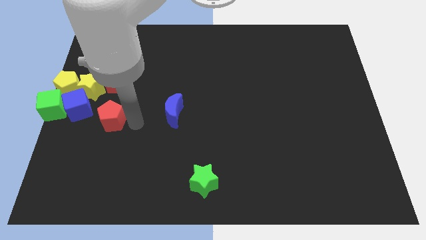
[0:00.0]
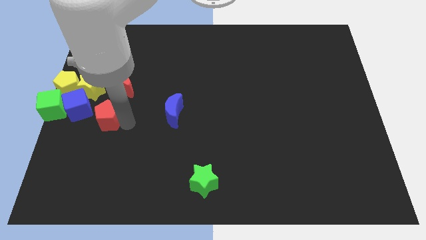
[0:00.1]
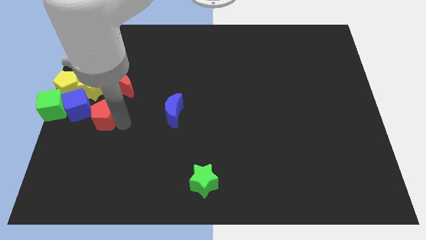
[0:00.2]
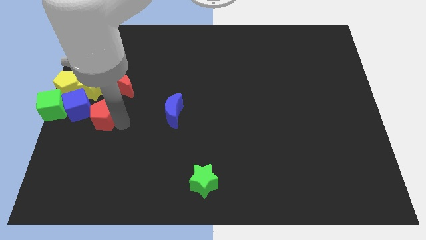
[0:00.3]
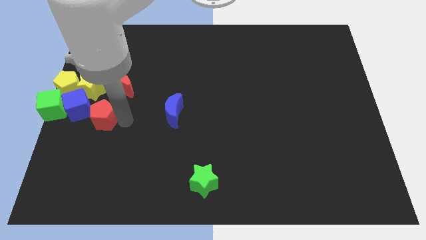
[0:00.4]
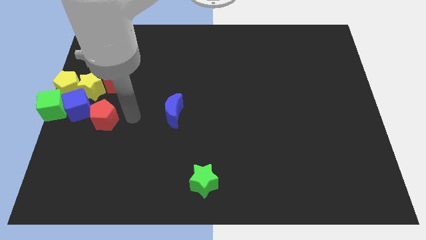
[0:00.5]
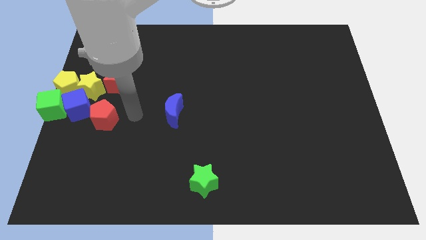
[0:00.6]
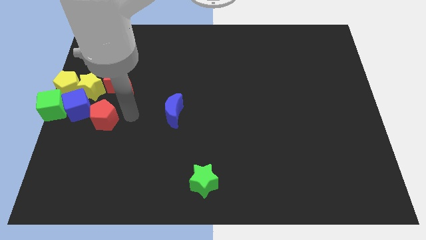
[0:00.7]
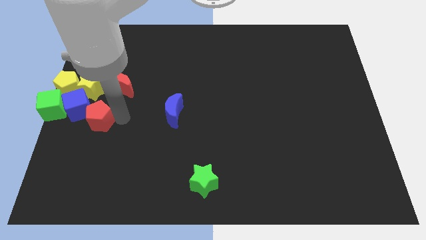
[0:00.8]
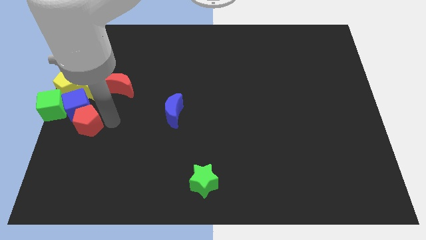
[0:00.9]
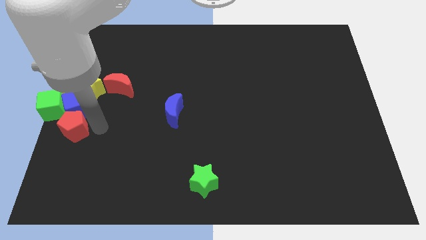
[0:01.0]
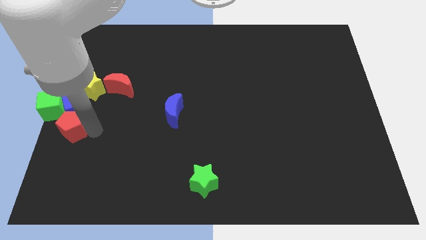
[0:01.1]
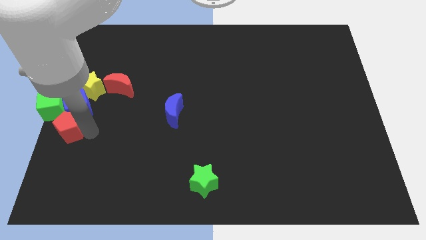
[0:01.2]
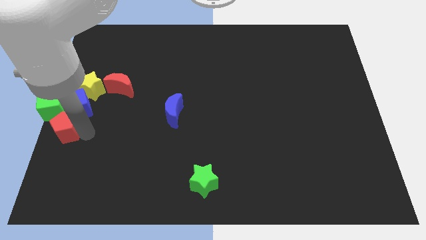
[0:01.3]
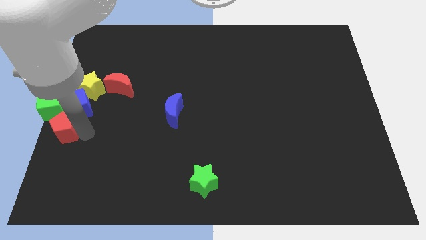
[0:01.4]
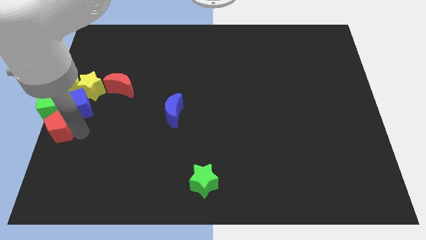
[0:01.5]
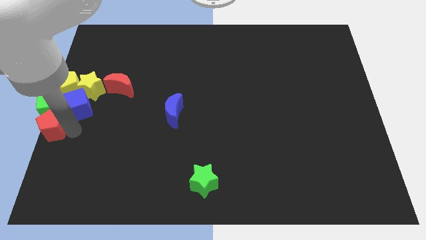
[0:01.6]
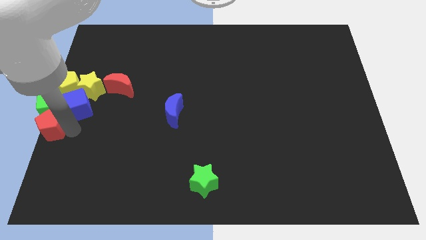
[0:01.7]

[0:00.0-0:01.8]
push the red pentagon below the green cube

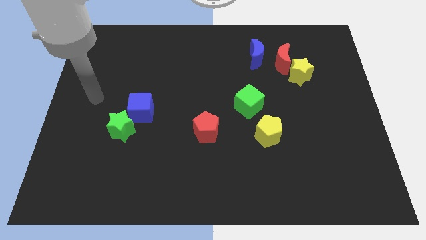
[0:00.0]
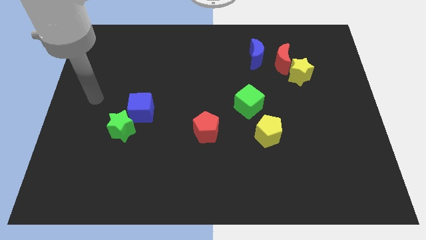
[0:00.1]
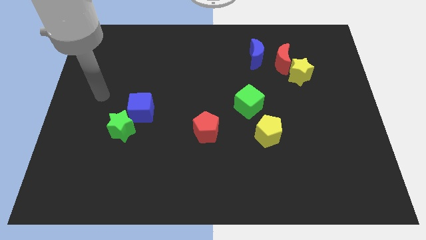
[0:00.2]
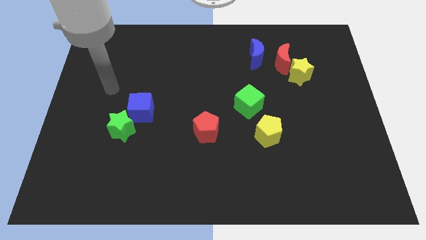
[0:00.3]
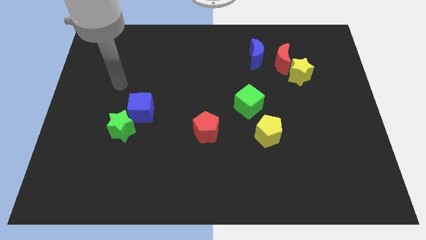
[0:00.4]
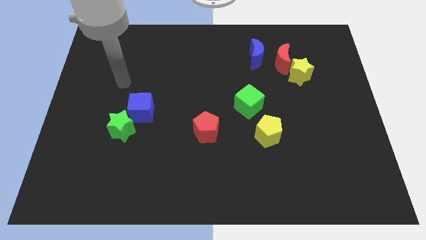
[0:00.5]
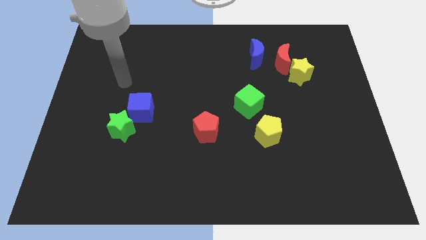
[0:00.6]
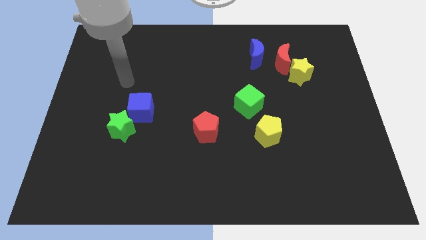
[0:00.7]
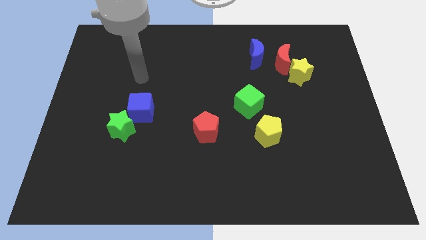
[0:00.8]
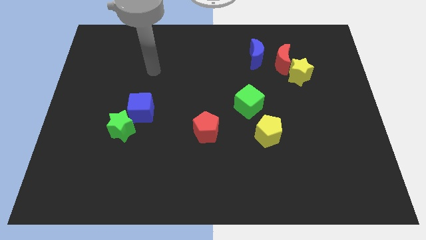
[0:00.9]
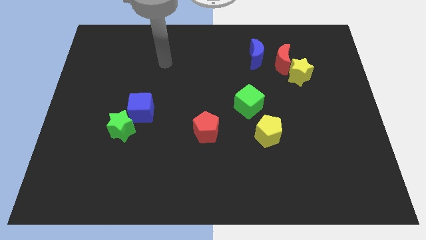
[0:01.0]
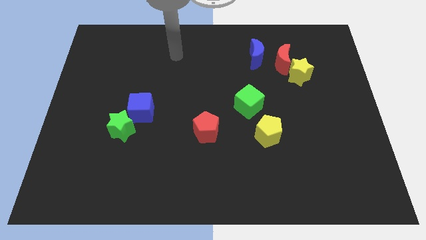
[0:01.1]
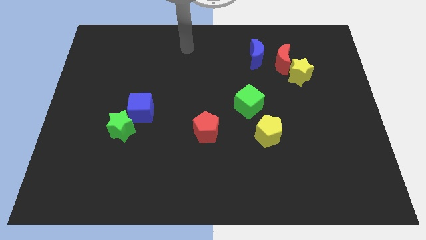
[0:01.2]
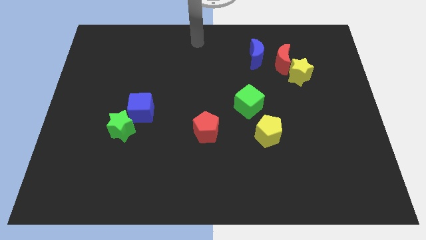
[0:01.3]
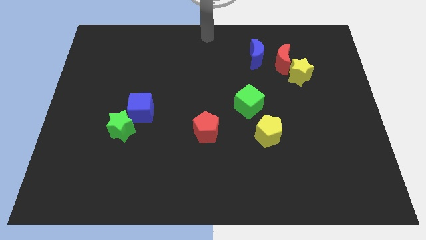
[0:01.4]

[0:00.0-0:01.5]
point the arm at the top center of the board

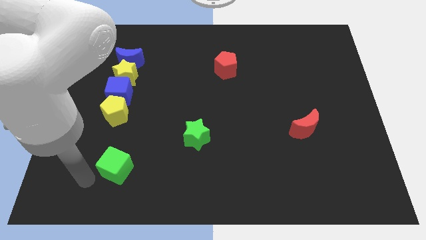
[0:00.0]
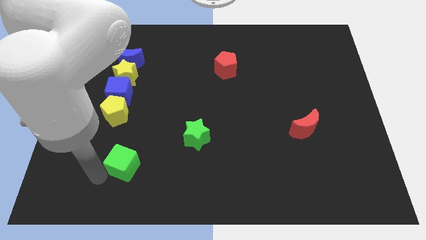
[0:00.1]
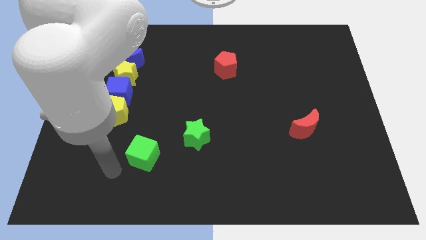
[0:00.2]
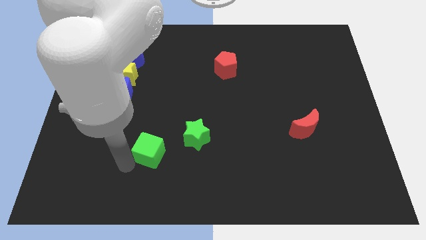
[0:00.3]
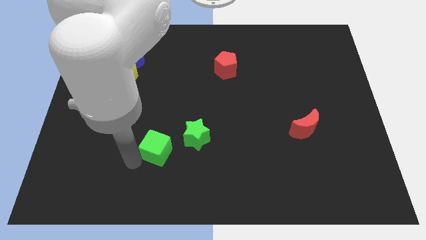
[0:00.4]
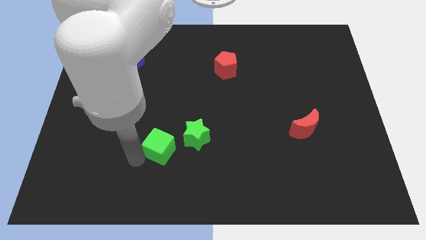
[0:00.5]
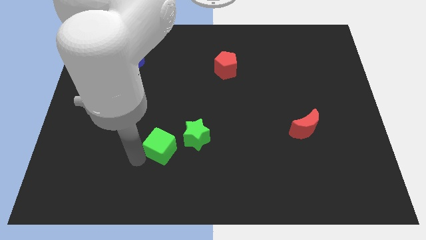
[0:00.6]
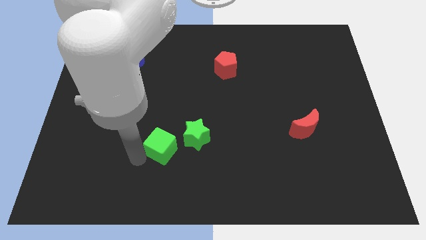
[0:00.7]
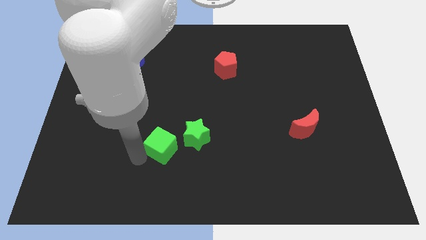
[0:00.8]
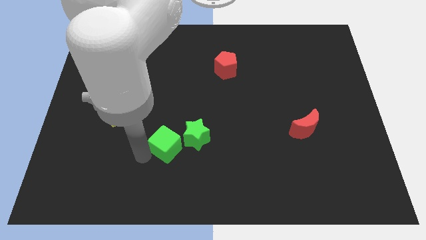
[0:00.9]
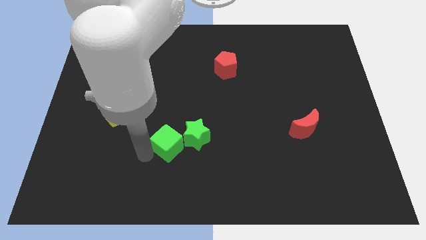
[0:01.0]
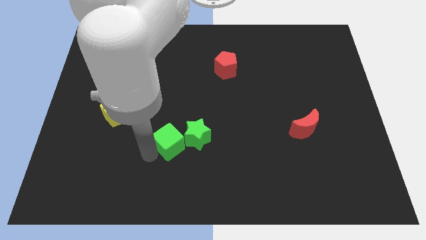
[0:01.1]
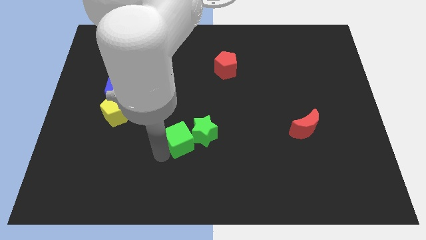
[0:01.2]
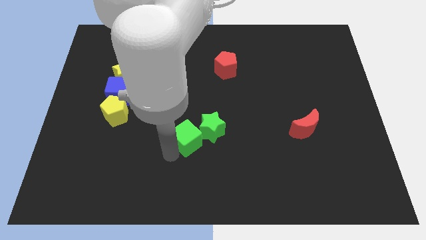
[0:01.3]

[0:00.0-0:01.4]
move the green cube into the green star

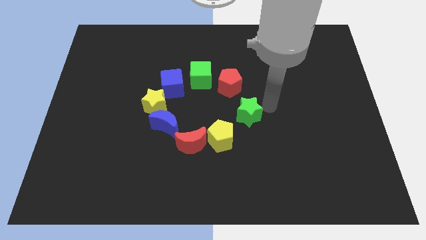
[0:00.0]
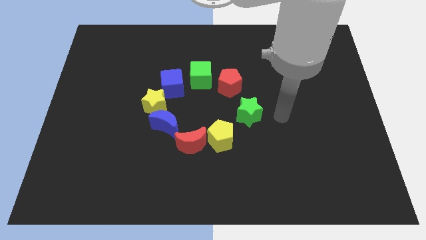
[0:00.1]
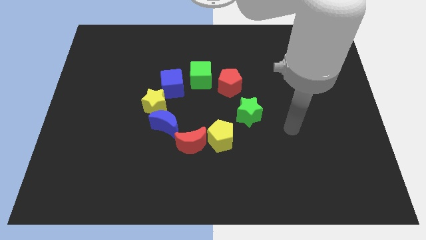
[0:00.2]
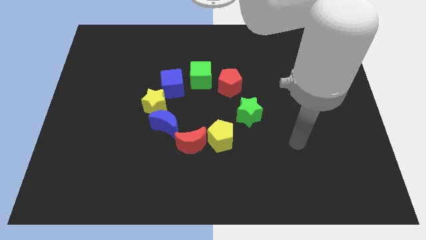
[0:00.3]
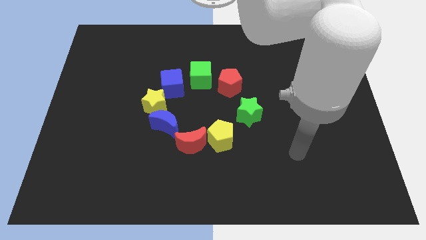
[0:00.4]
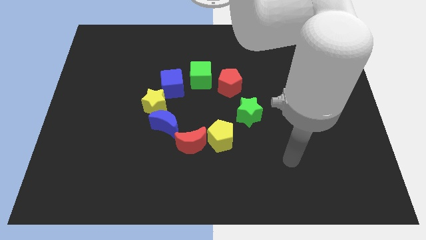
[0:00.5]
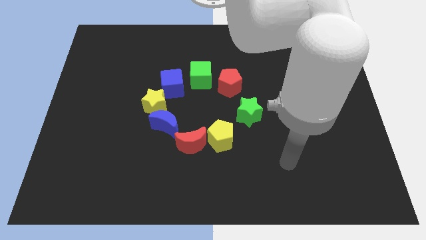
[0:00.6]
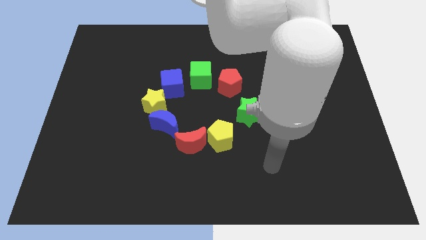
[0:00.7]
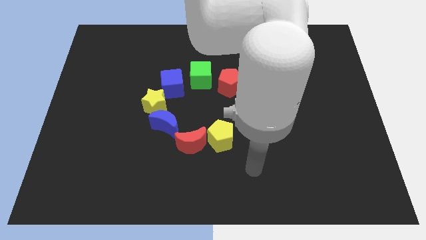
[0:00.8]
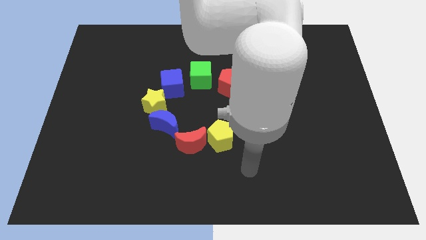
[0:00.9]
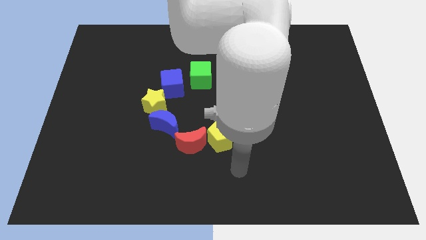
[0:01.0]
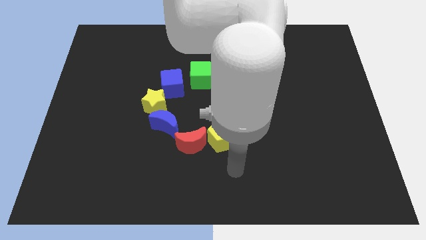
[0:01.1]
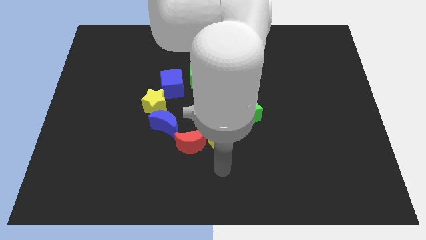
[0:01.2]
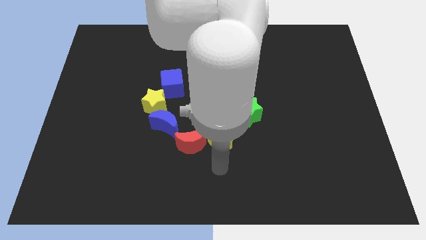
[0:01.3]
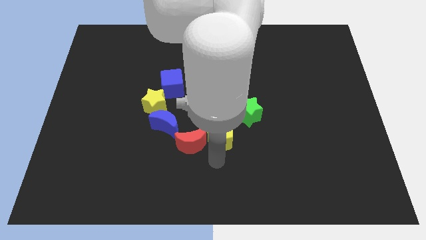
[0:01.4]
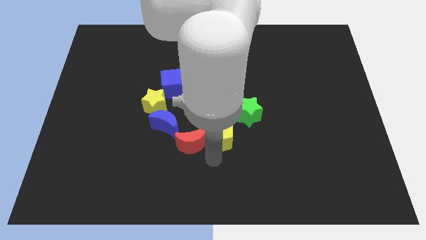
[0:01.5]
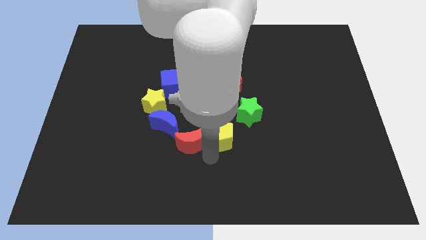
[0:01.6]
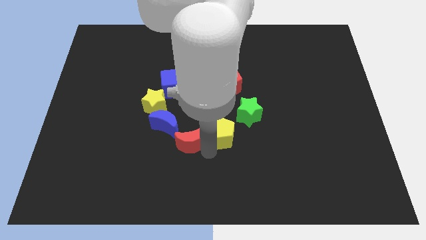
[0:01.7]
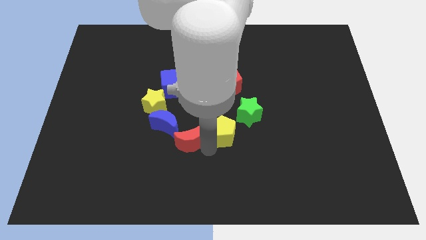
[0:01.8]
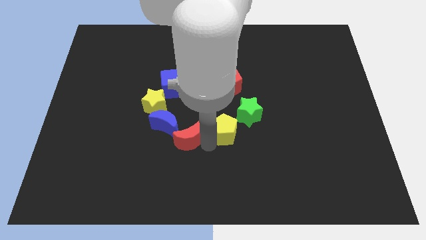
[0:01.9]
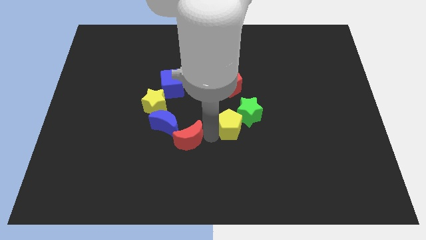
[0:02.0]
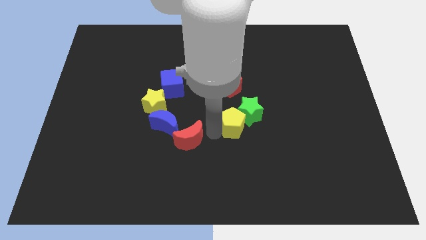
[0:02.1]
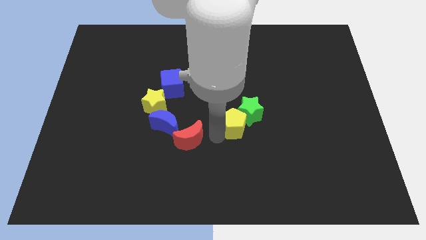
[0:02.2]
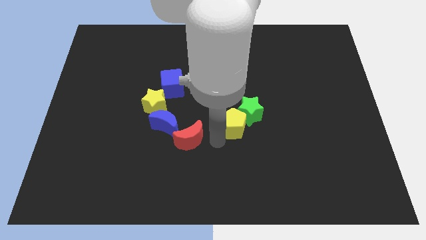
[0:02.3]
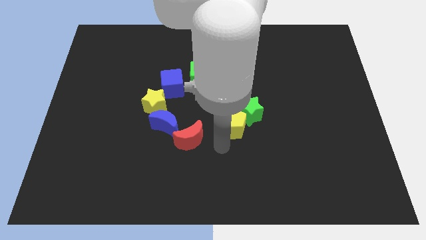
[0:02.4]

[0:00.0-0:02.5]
push the yellow pentagon into green star

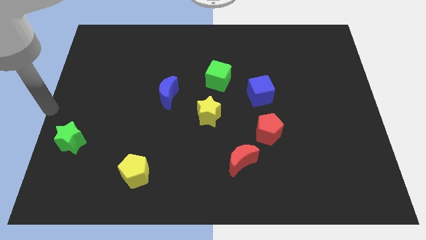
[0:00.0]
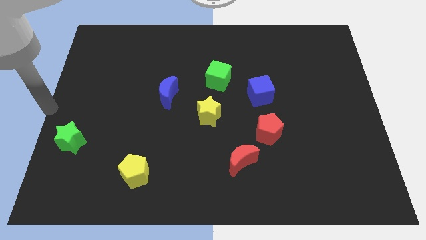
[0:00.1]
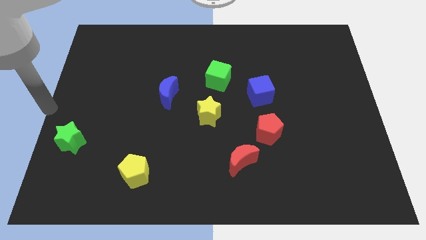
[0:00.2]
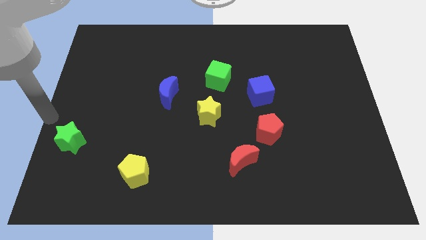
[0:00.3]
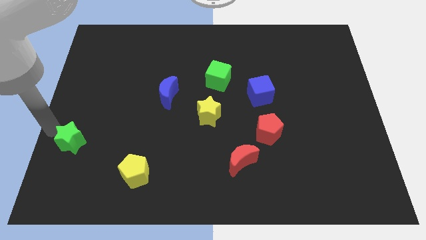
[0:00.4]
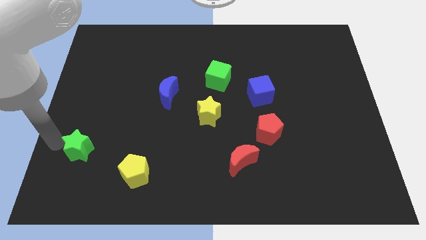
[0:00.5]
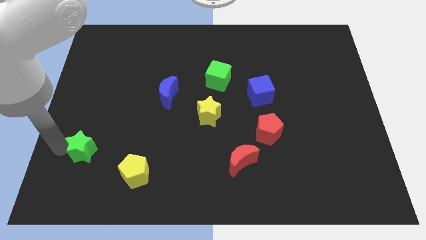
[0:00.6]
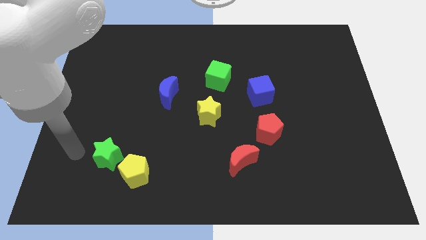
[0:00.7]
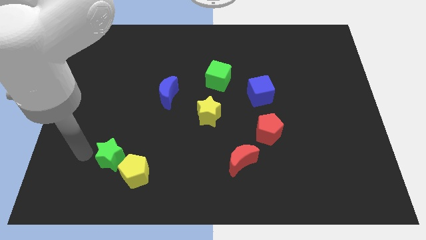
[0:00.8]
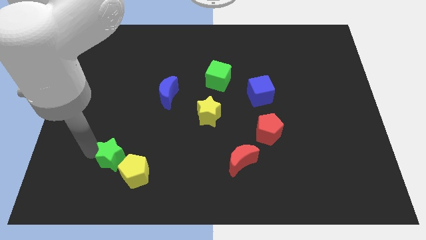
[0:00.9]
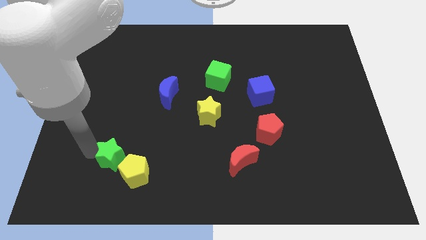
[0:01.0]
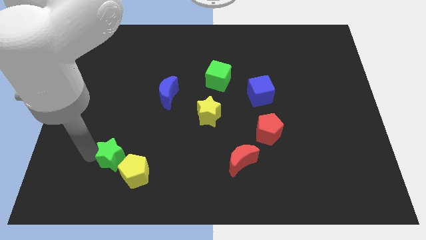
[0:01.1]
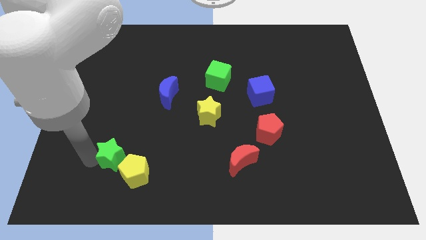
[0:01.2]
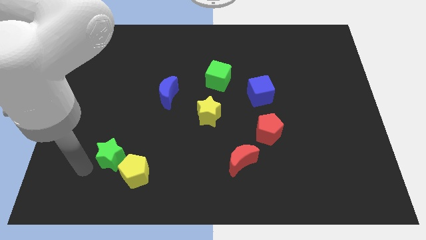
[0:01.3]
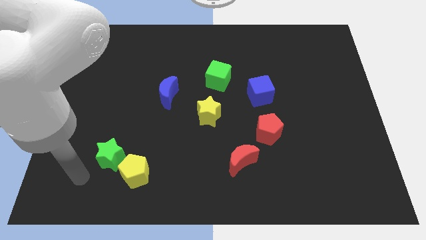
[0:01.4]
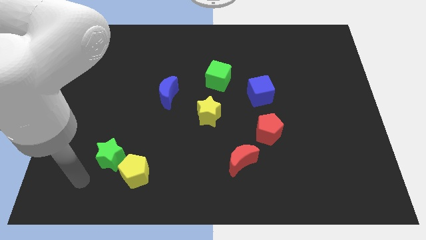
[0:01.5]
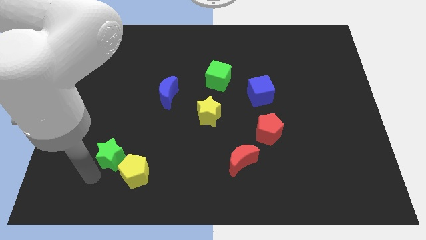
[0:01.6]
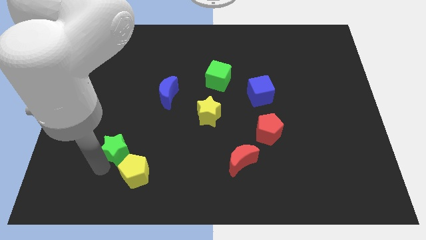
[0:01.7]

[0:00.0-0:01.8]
push the green star into the yellow pentagon
